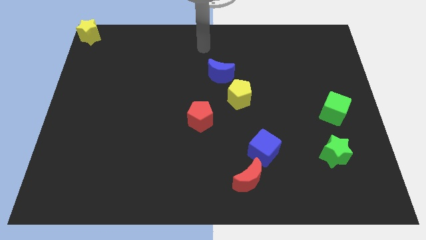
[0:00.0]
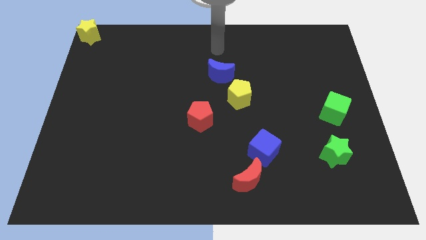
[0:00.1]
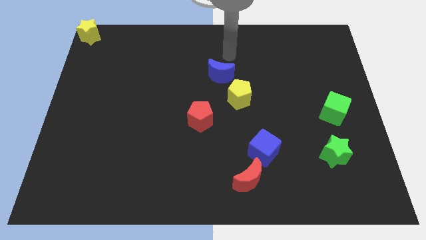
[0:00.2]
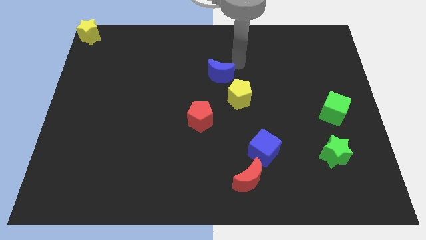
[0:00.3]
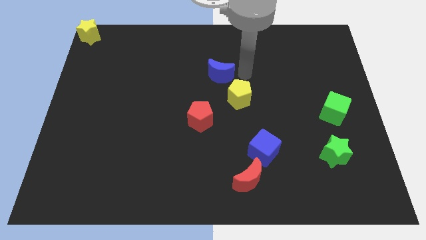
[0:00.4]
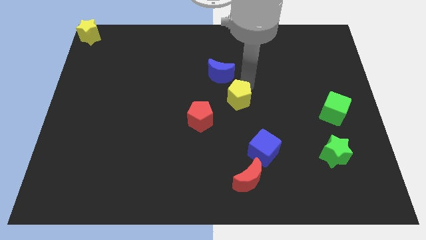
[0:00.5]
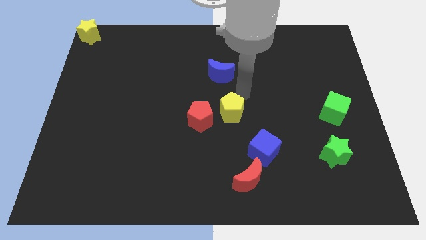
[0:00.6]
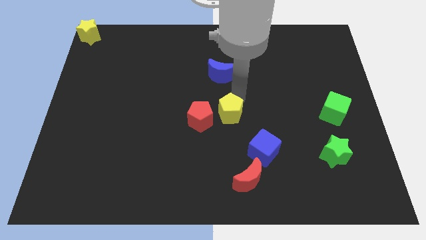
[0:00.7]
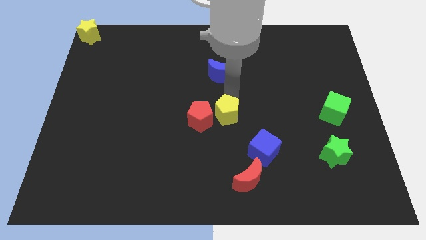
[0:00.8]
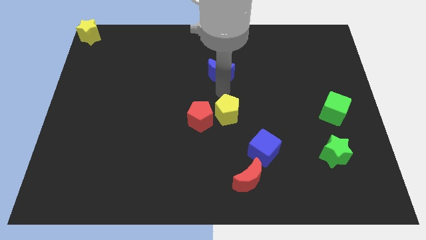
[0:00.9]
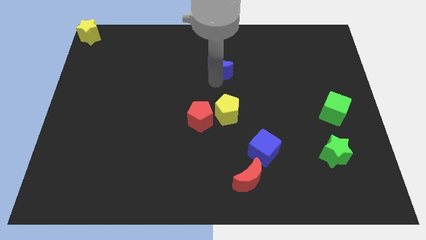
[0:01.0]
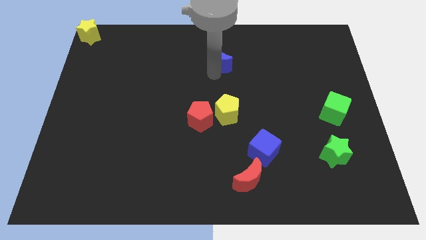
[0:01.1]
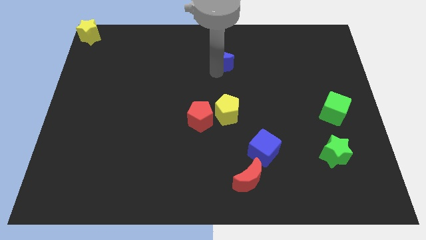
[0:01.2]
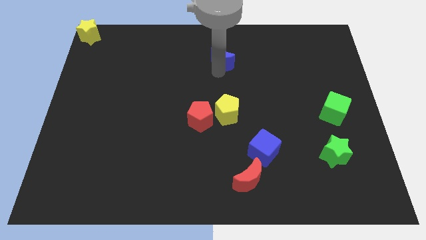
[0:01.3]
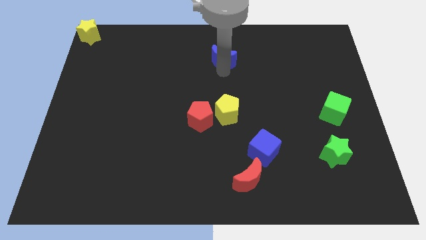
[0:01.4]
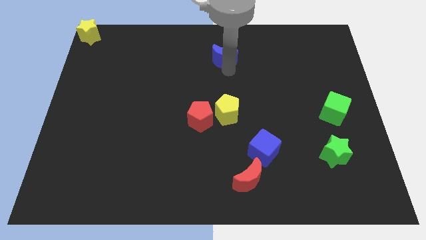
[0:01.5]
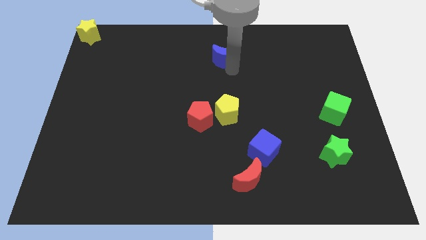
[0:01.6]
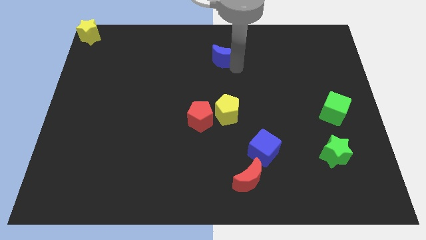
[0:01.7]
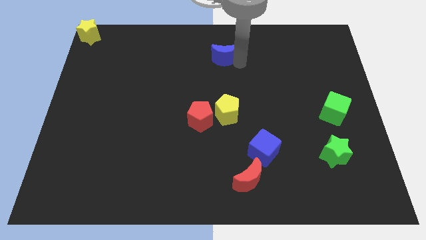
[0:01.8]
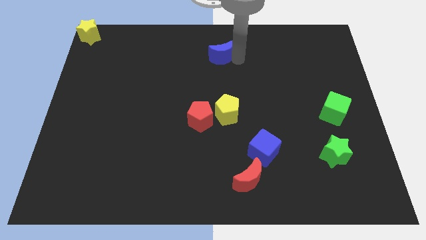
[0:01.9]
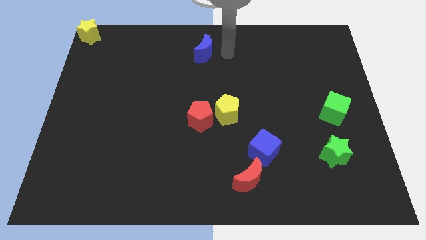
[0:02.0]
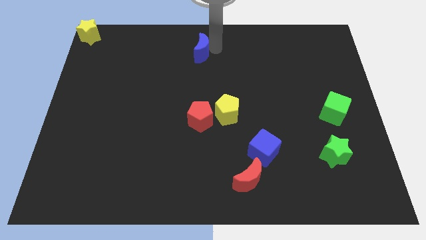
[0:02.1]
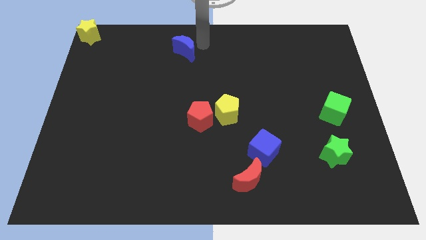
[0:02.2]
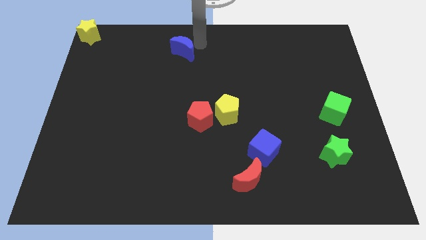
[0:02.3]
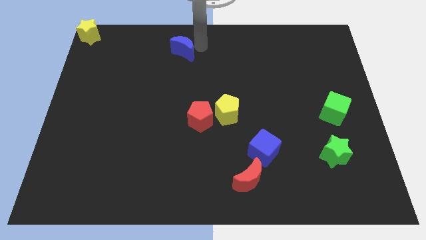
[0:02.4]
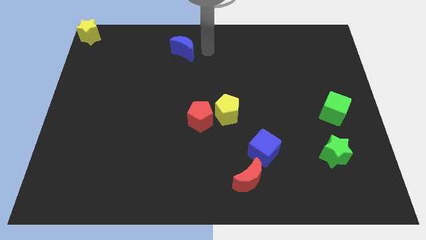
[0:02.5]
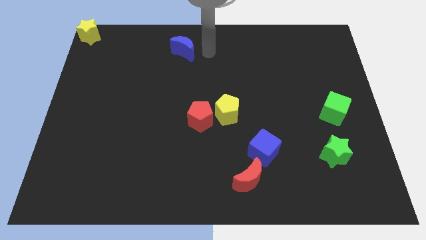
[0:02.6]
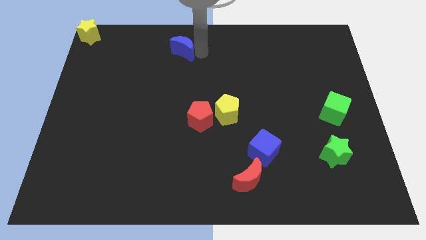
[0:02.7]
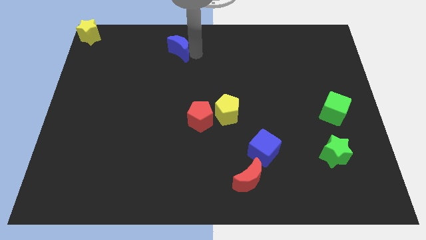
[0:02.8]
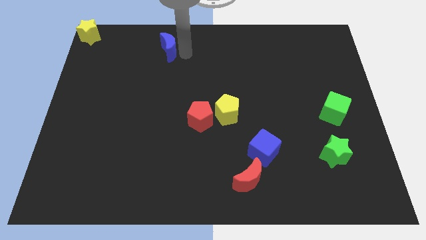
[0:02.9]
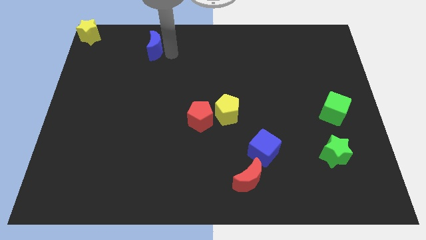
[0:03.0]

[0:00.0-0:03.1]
separate yellow pentagon and blue moon from each other

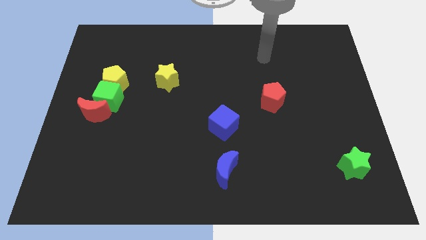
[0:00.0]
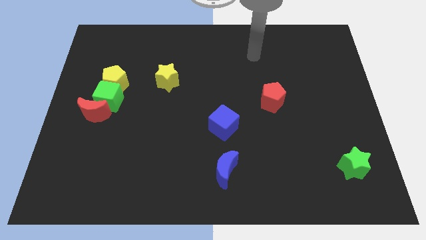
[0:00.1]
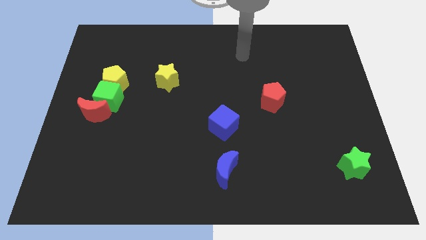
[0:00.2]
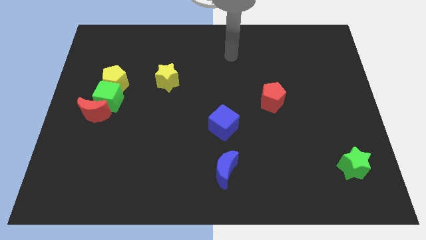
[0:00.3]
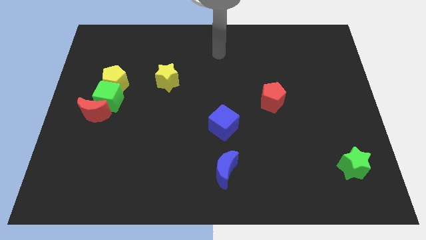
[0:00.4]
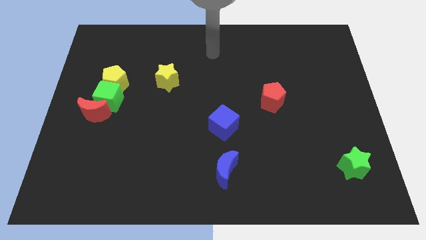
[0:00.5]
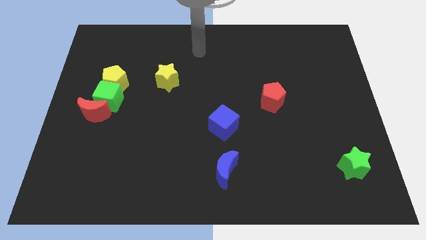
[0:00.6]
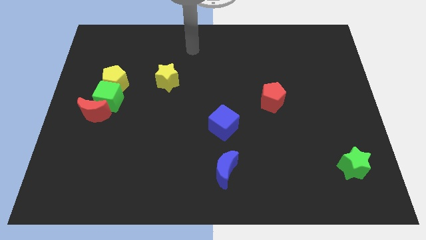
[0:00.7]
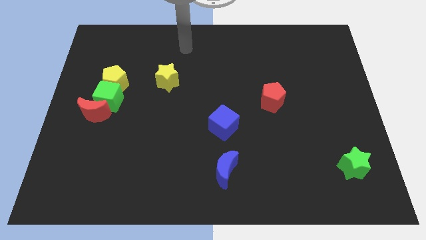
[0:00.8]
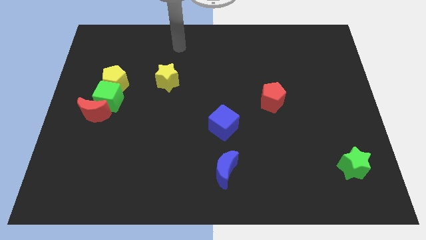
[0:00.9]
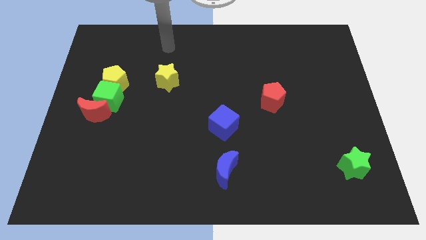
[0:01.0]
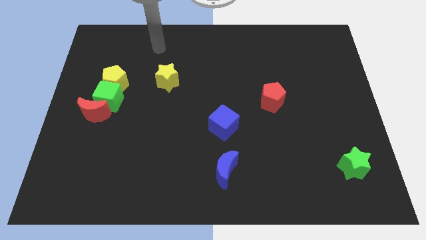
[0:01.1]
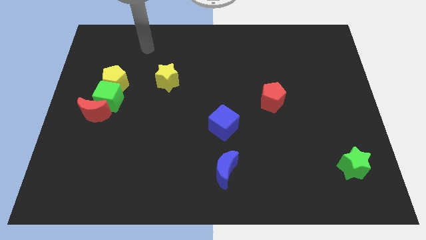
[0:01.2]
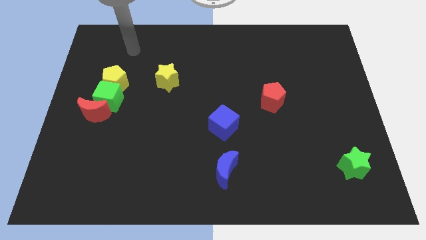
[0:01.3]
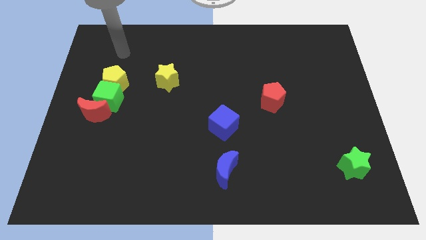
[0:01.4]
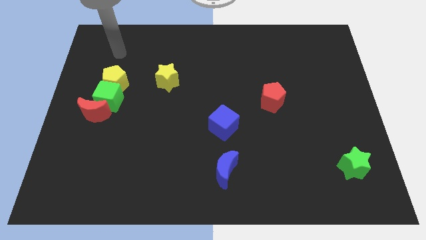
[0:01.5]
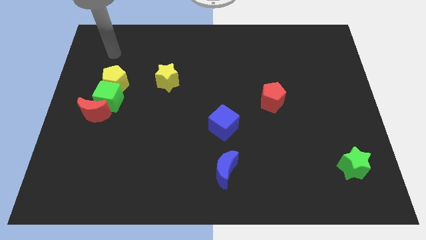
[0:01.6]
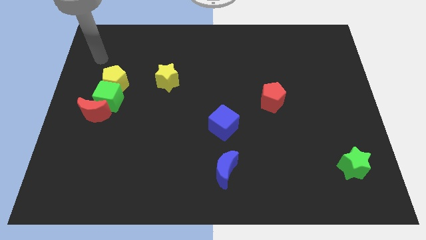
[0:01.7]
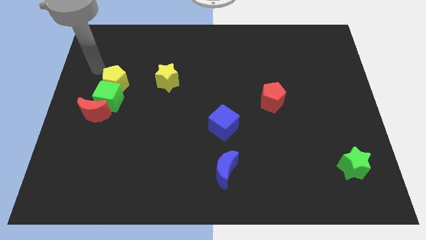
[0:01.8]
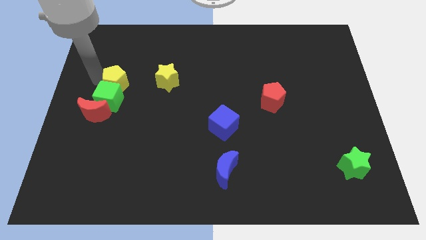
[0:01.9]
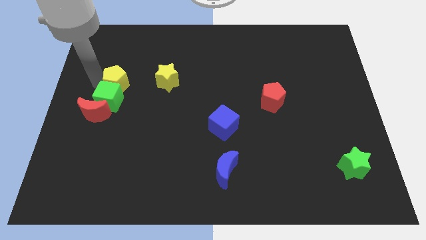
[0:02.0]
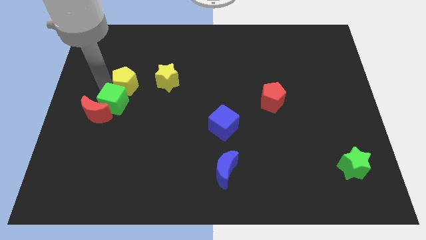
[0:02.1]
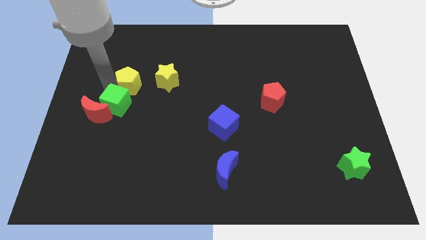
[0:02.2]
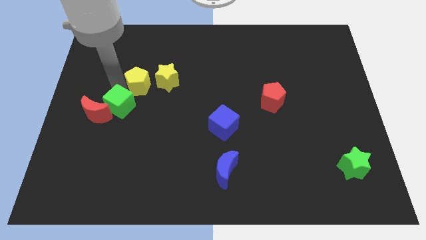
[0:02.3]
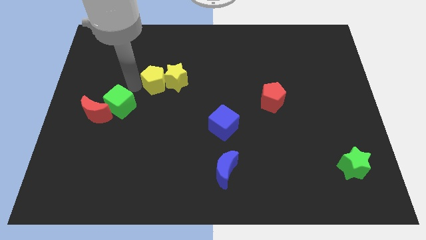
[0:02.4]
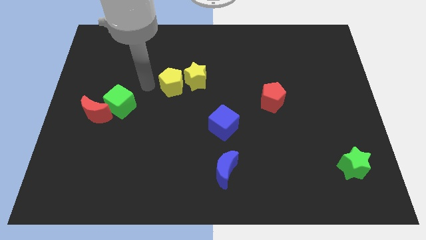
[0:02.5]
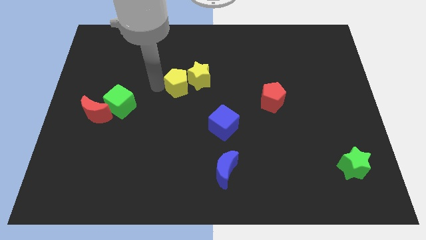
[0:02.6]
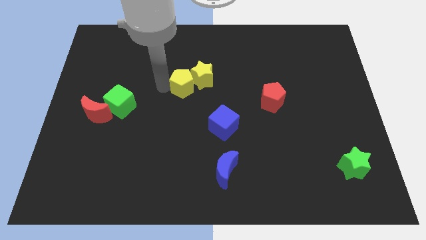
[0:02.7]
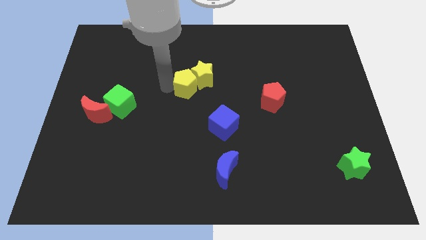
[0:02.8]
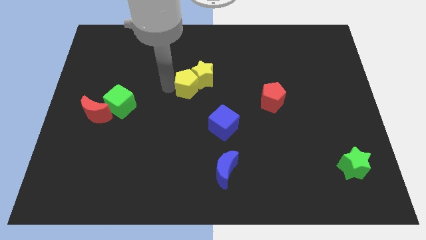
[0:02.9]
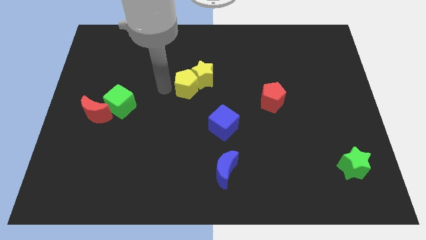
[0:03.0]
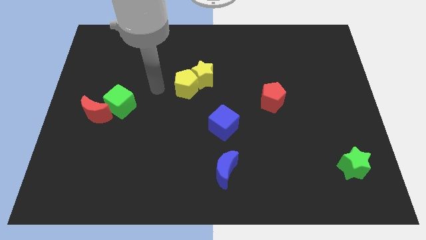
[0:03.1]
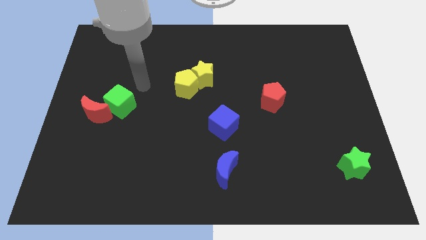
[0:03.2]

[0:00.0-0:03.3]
push the yellow pentagon into the yellow star

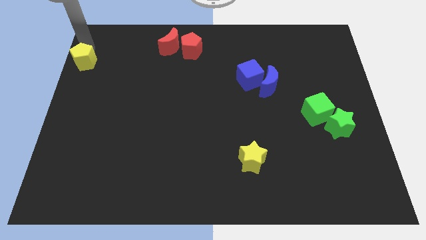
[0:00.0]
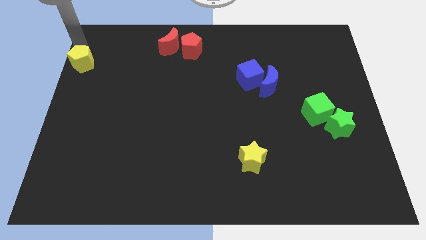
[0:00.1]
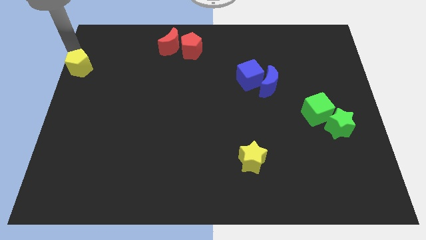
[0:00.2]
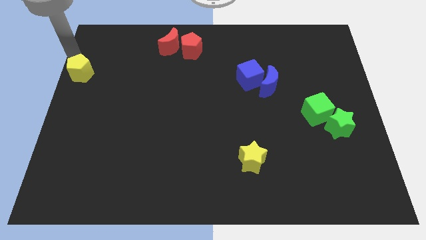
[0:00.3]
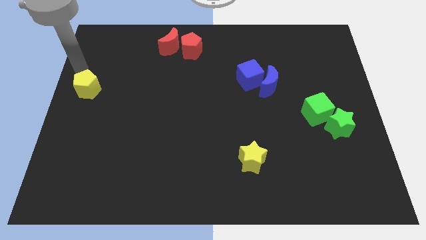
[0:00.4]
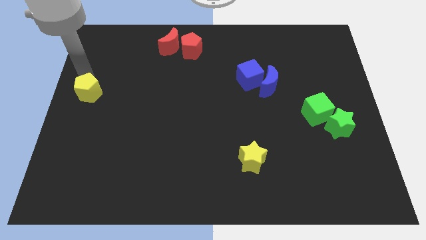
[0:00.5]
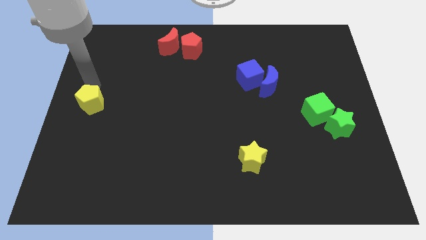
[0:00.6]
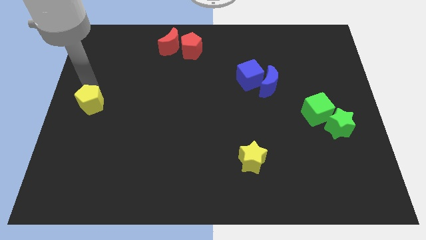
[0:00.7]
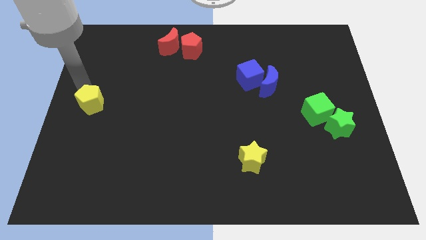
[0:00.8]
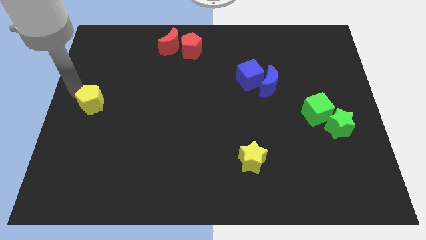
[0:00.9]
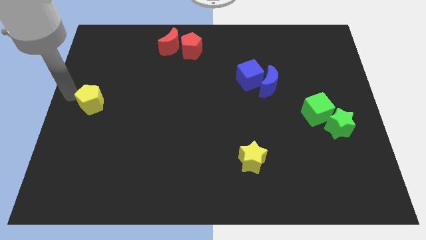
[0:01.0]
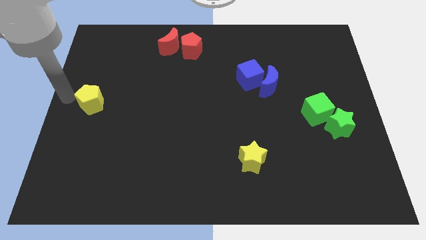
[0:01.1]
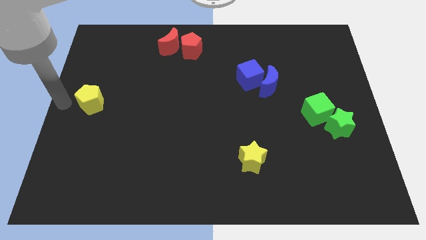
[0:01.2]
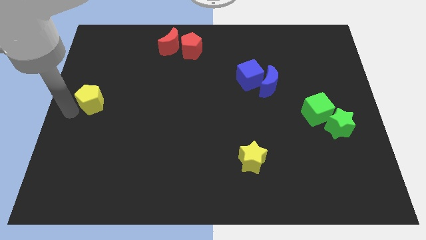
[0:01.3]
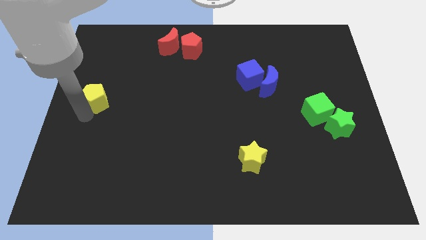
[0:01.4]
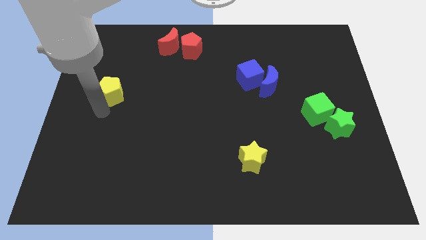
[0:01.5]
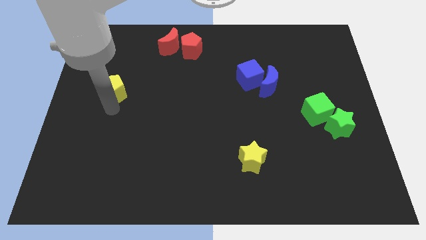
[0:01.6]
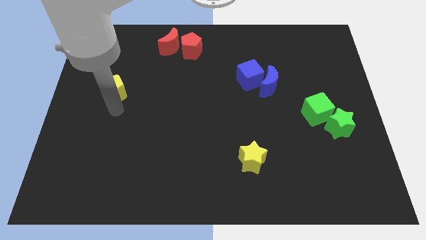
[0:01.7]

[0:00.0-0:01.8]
place the yellow pentagon diagonally below the red crescent

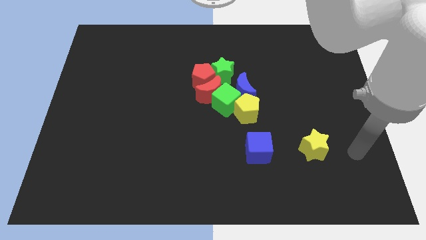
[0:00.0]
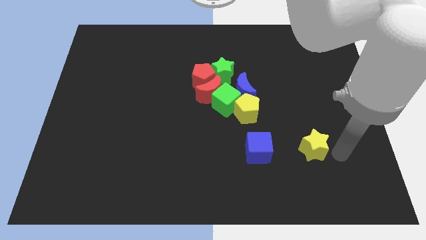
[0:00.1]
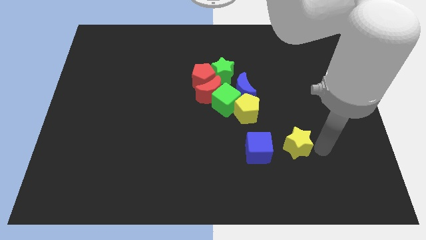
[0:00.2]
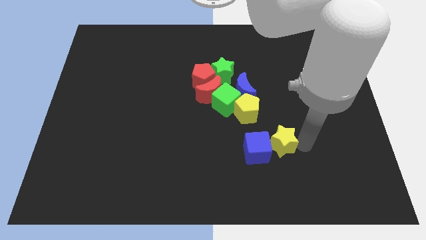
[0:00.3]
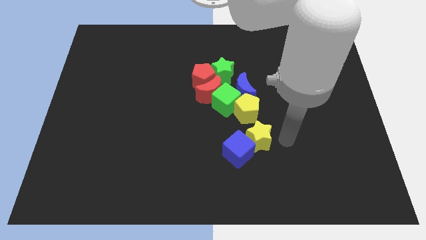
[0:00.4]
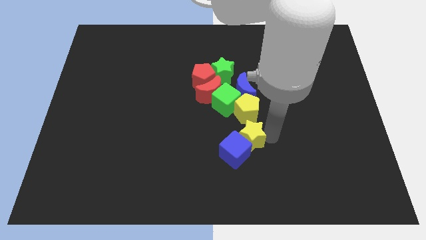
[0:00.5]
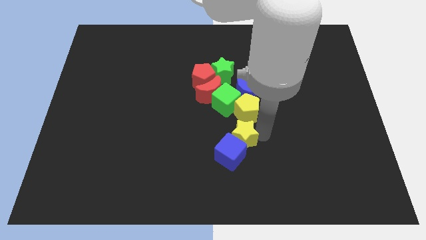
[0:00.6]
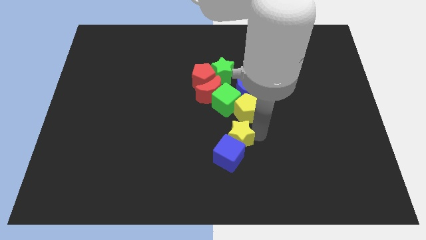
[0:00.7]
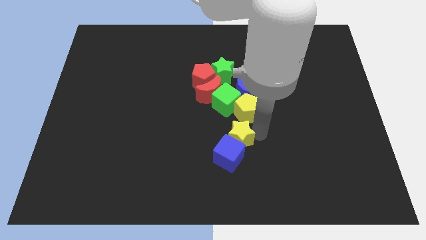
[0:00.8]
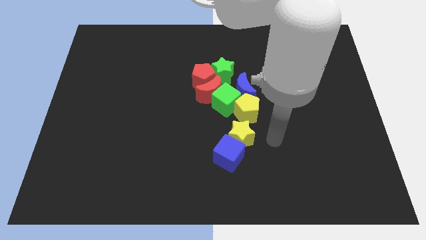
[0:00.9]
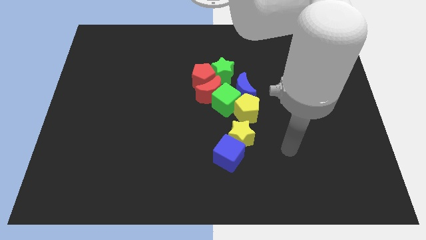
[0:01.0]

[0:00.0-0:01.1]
push the yellow star into the blue cube
